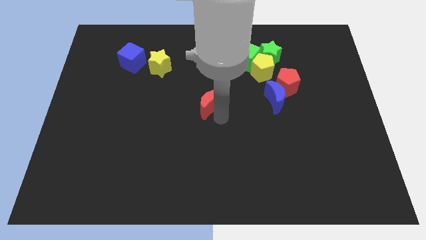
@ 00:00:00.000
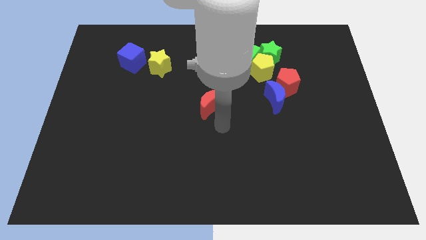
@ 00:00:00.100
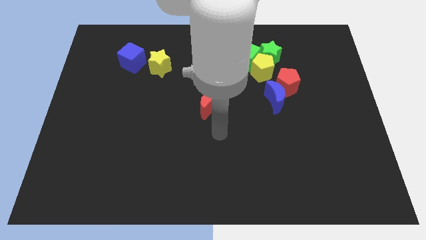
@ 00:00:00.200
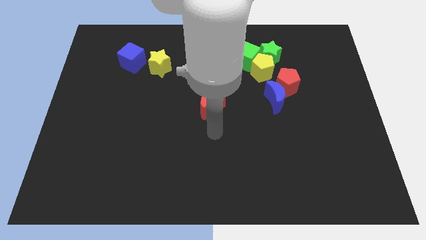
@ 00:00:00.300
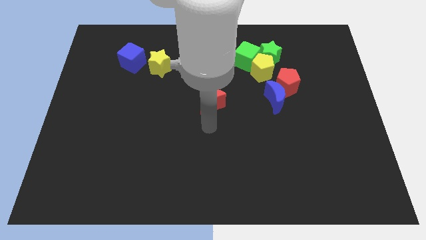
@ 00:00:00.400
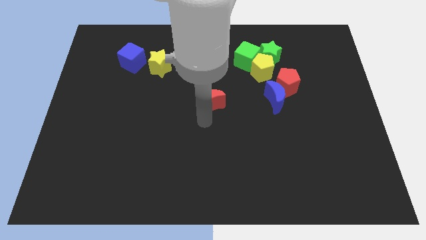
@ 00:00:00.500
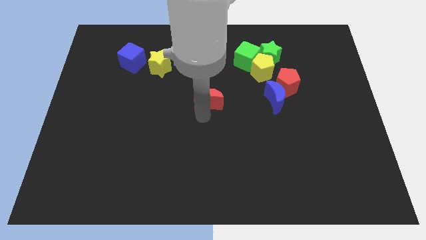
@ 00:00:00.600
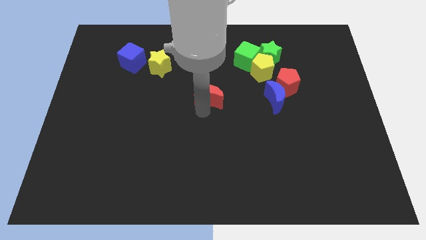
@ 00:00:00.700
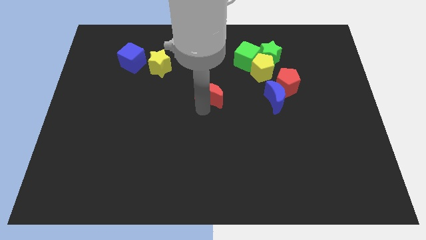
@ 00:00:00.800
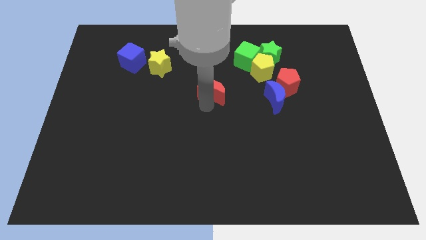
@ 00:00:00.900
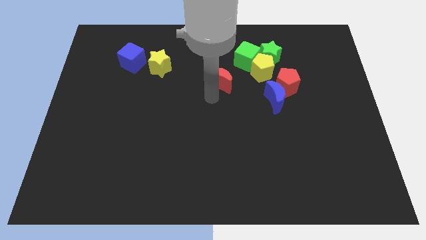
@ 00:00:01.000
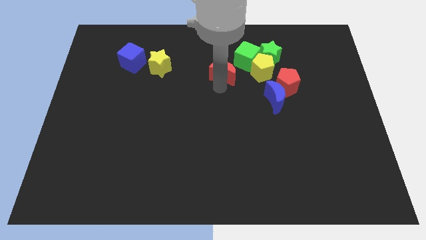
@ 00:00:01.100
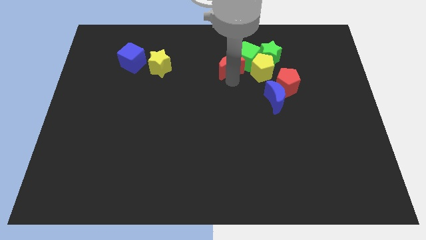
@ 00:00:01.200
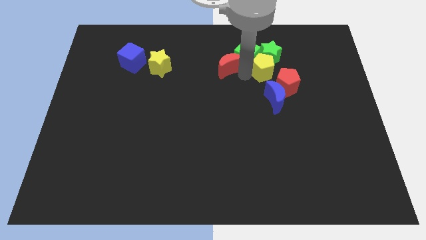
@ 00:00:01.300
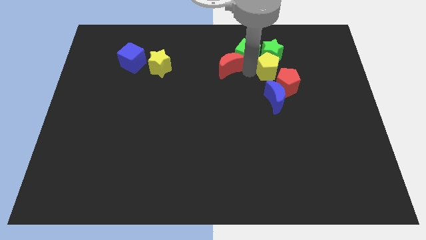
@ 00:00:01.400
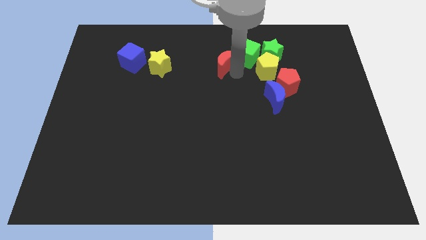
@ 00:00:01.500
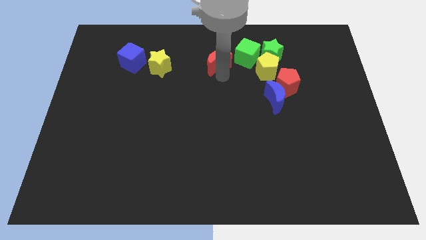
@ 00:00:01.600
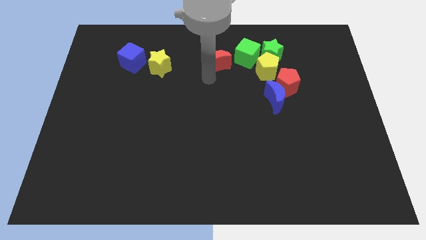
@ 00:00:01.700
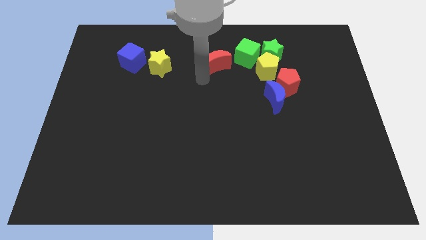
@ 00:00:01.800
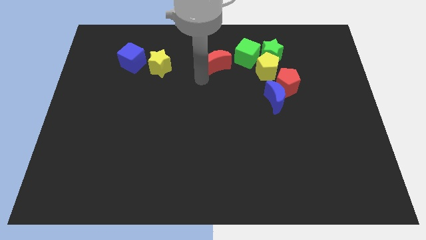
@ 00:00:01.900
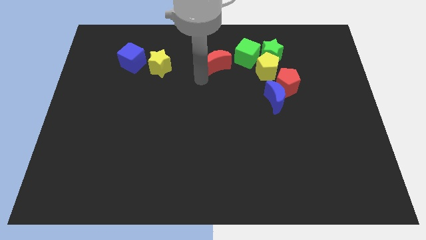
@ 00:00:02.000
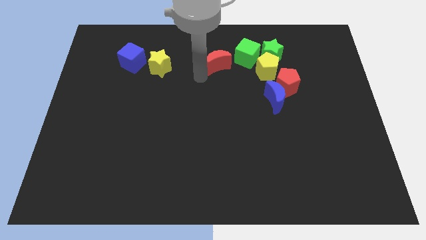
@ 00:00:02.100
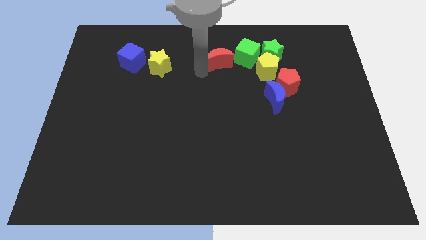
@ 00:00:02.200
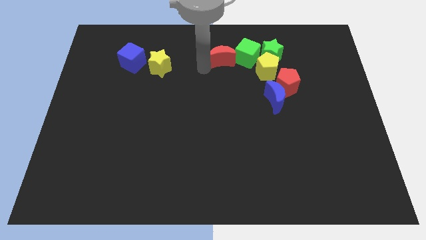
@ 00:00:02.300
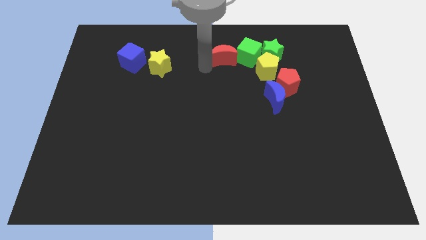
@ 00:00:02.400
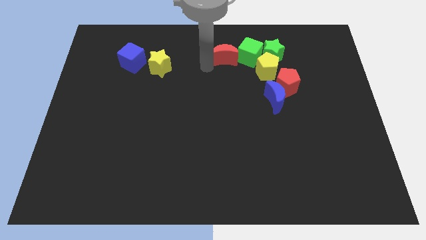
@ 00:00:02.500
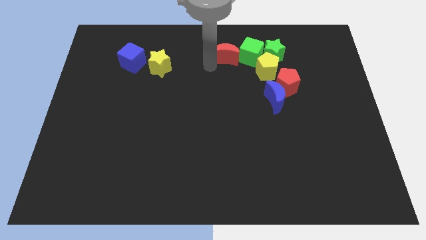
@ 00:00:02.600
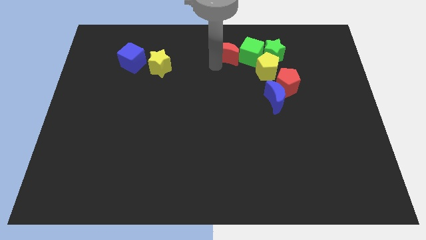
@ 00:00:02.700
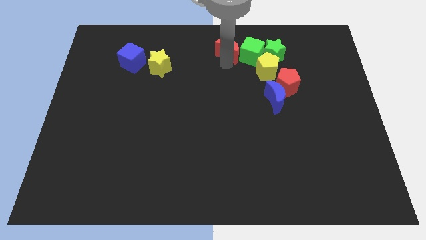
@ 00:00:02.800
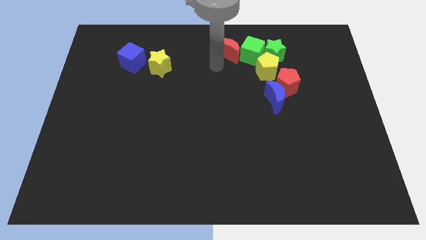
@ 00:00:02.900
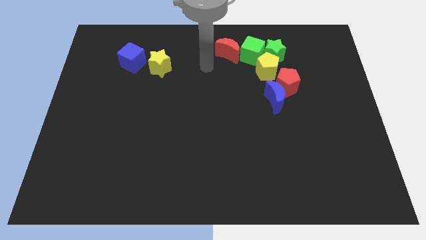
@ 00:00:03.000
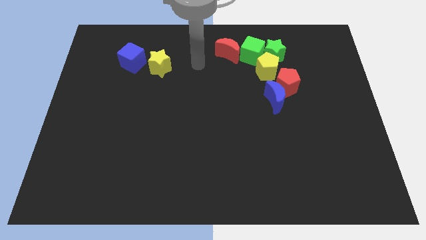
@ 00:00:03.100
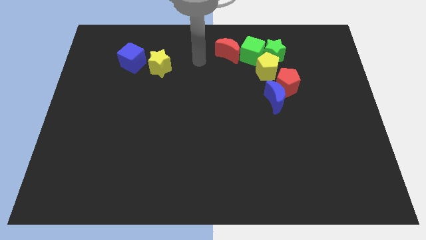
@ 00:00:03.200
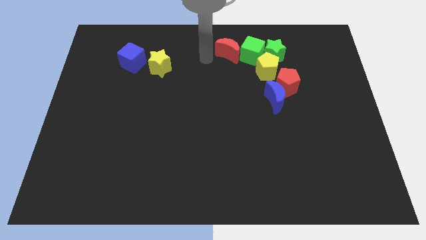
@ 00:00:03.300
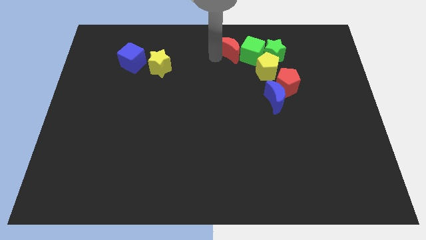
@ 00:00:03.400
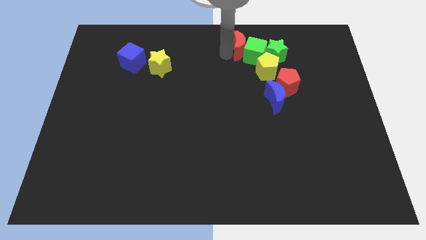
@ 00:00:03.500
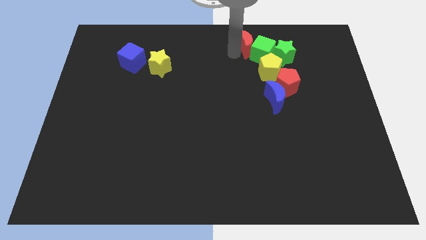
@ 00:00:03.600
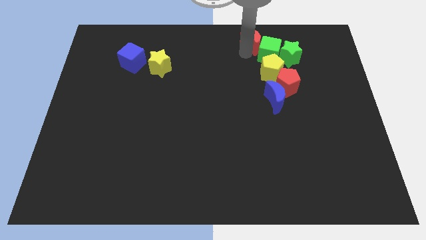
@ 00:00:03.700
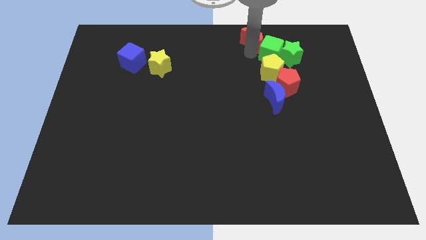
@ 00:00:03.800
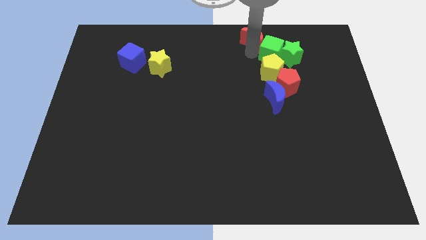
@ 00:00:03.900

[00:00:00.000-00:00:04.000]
push the red crescent into the green cube

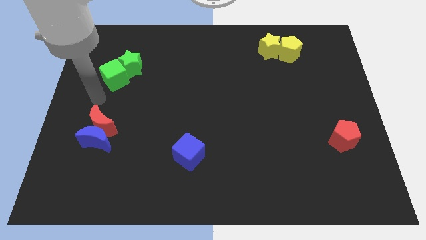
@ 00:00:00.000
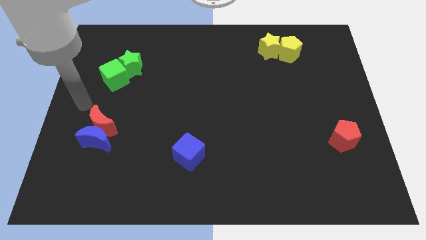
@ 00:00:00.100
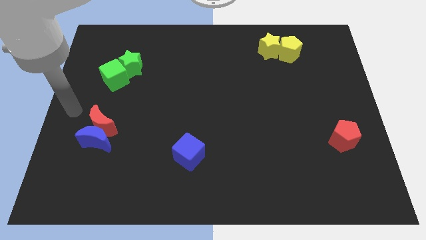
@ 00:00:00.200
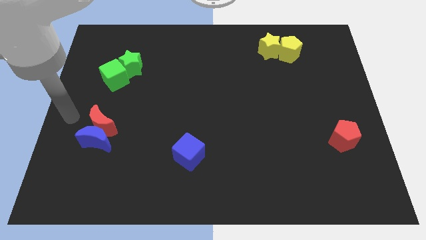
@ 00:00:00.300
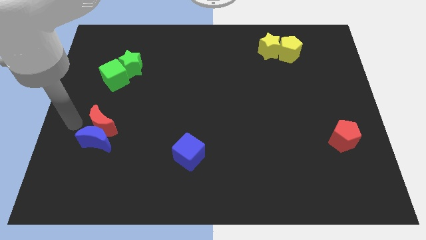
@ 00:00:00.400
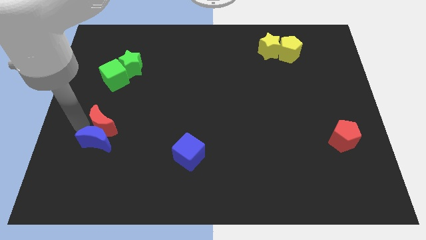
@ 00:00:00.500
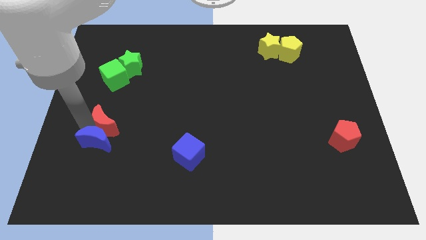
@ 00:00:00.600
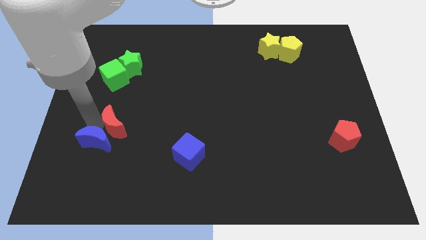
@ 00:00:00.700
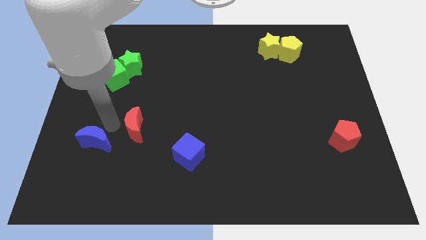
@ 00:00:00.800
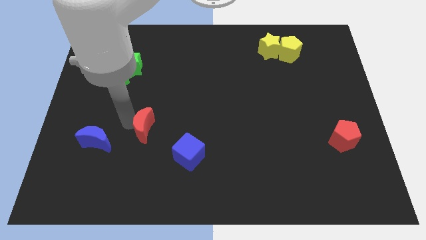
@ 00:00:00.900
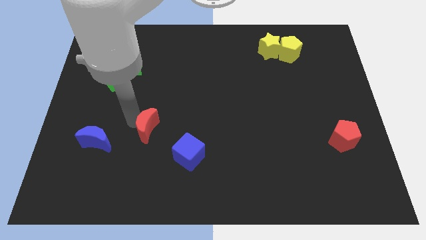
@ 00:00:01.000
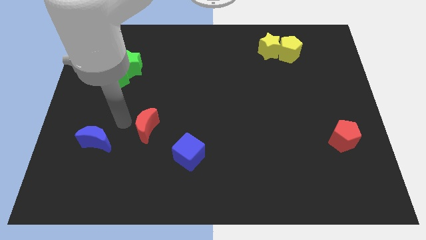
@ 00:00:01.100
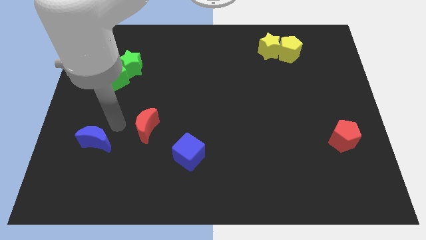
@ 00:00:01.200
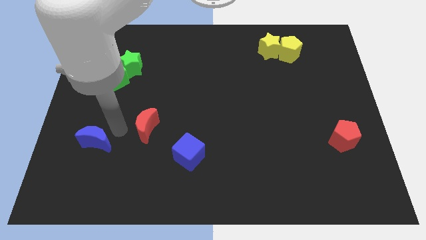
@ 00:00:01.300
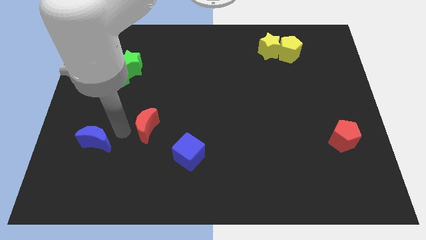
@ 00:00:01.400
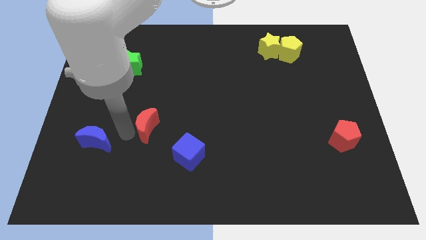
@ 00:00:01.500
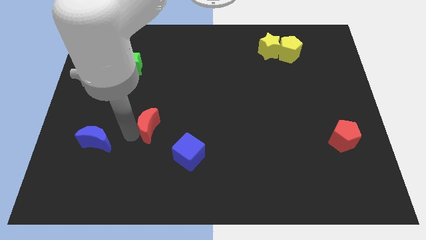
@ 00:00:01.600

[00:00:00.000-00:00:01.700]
move the red moon slightly to the right

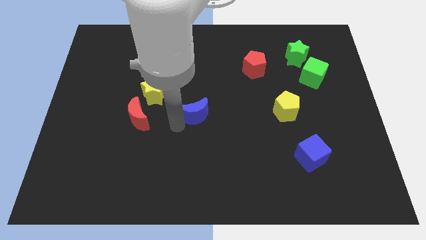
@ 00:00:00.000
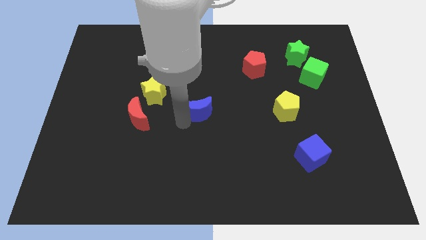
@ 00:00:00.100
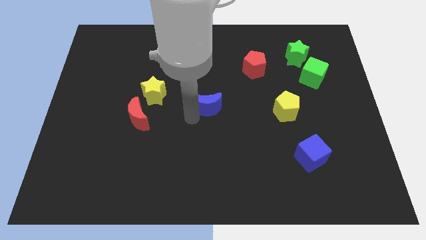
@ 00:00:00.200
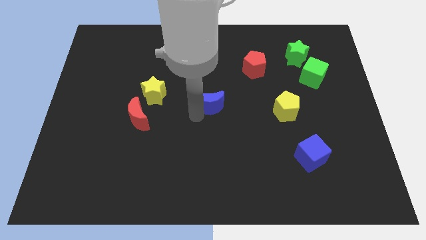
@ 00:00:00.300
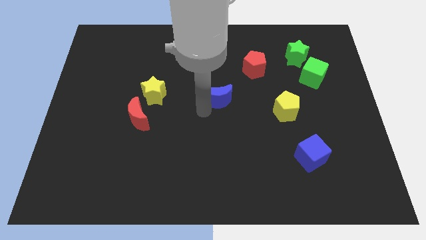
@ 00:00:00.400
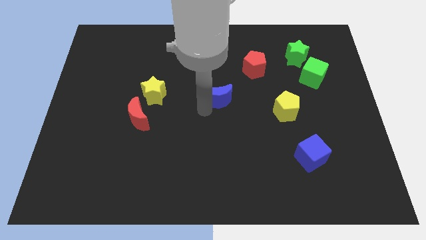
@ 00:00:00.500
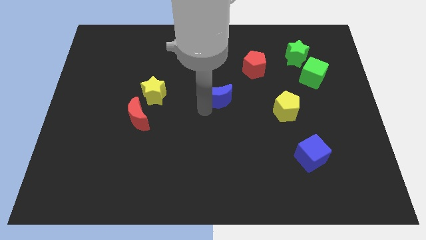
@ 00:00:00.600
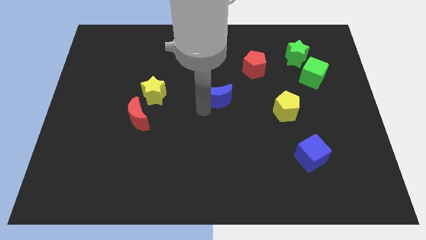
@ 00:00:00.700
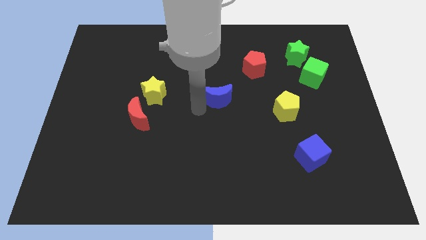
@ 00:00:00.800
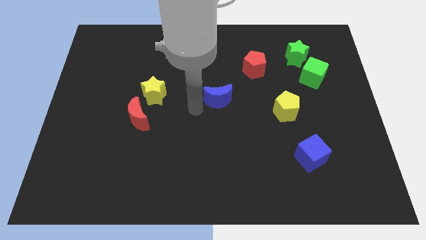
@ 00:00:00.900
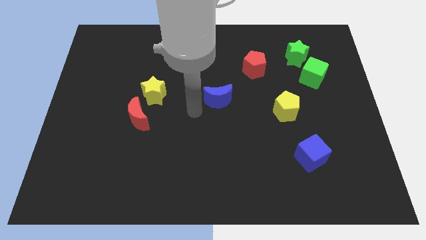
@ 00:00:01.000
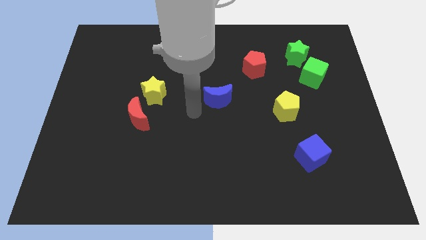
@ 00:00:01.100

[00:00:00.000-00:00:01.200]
point arm beside blue moon

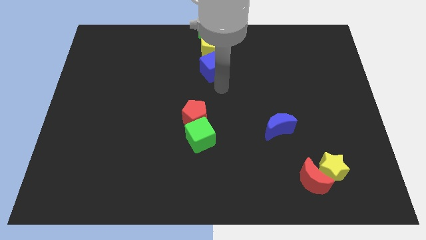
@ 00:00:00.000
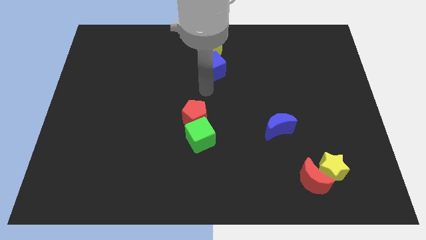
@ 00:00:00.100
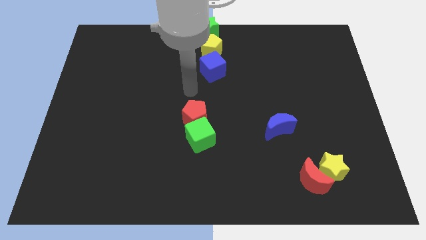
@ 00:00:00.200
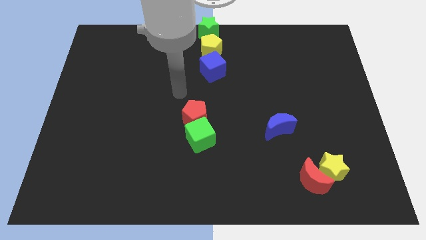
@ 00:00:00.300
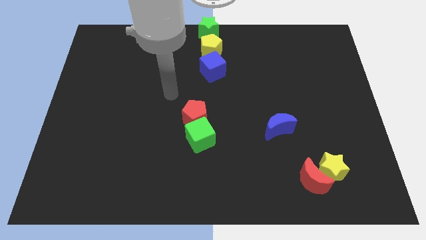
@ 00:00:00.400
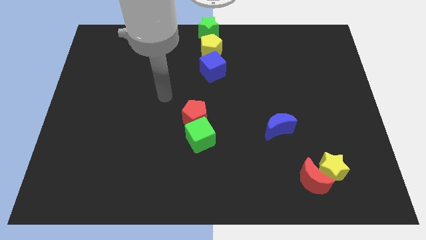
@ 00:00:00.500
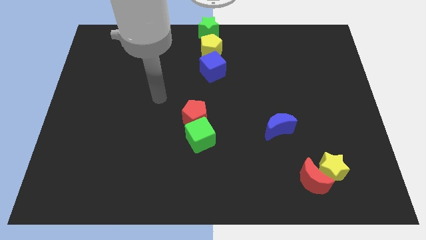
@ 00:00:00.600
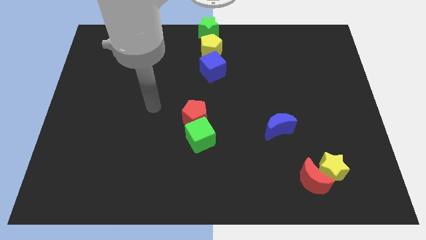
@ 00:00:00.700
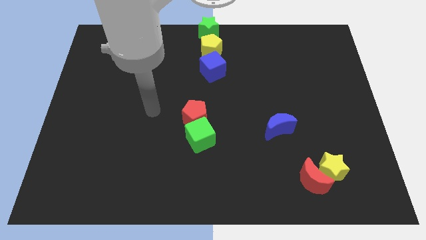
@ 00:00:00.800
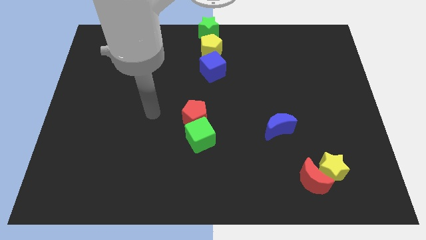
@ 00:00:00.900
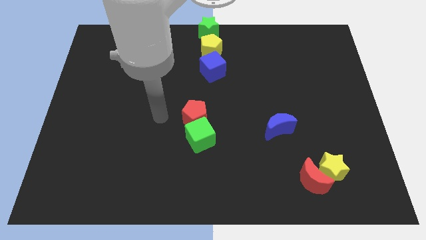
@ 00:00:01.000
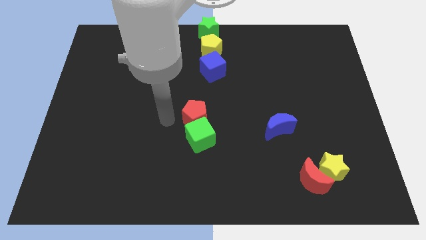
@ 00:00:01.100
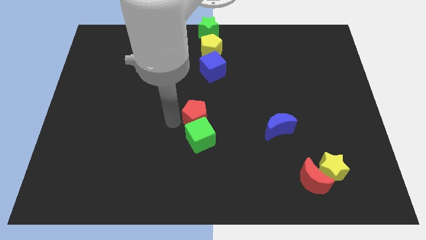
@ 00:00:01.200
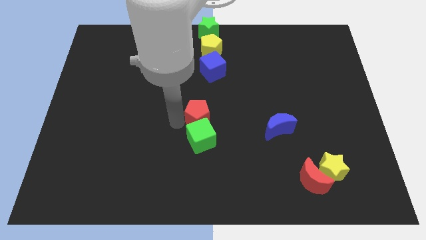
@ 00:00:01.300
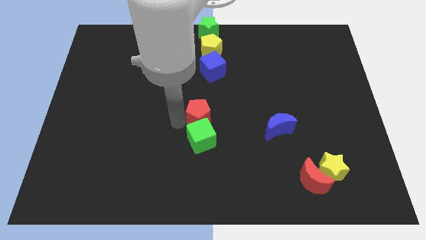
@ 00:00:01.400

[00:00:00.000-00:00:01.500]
tap the red pentagon

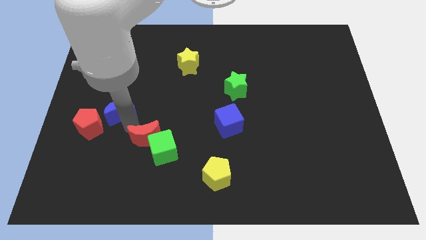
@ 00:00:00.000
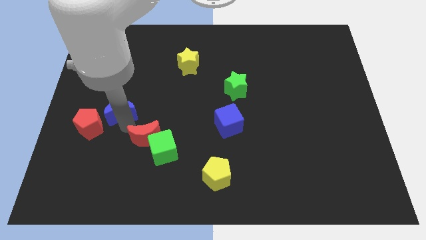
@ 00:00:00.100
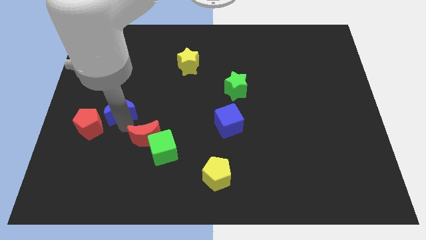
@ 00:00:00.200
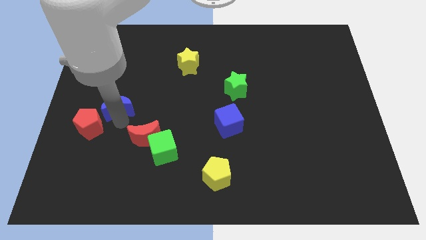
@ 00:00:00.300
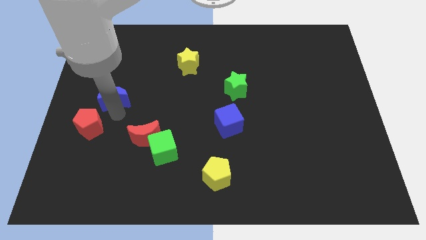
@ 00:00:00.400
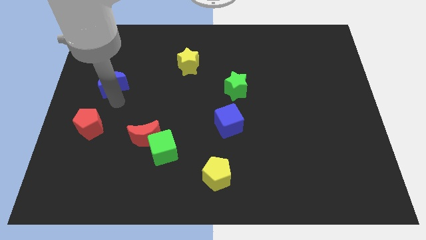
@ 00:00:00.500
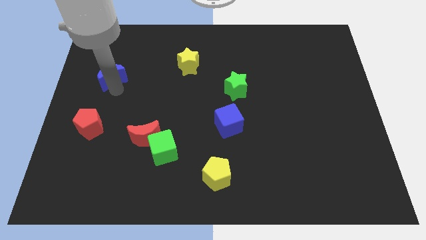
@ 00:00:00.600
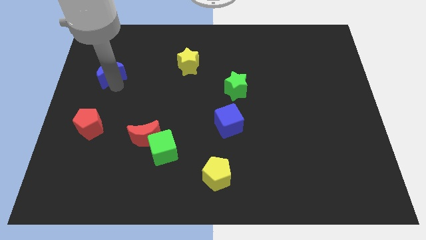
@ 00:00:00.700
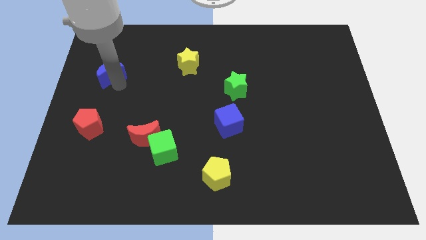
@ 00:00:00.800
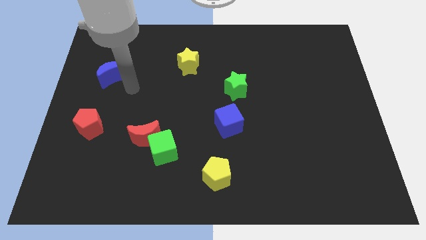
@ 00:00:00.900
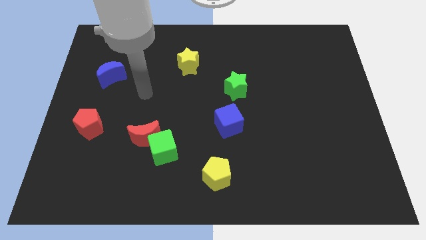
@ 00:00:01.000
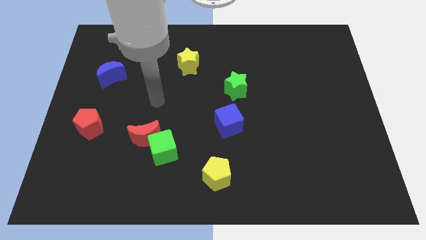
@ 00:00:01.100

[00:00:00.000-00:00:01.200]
move the blue crescent slightly towards top left
